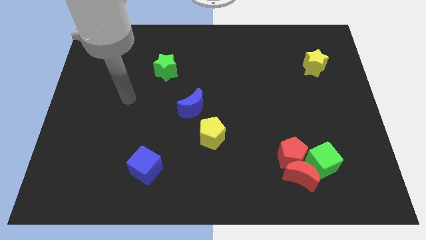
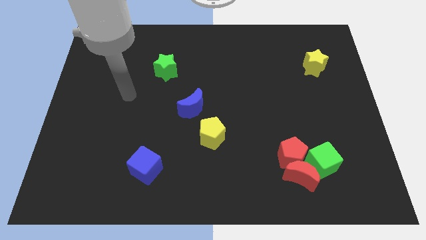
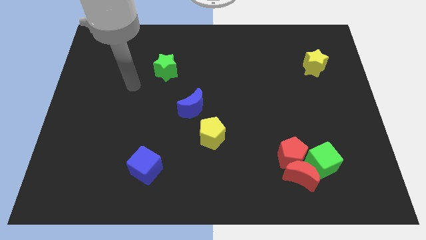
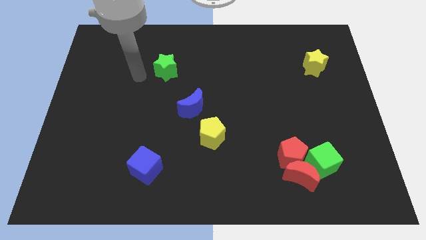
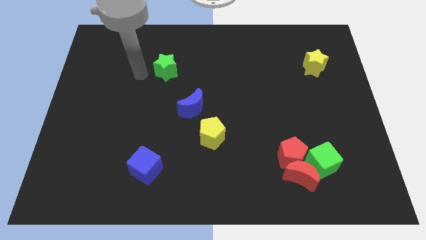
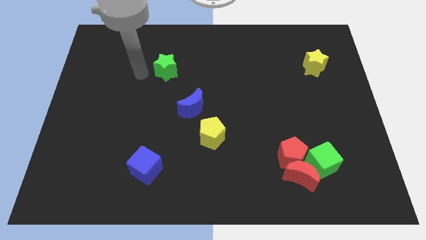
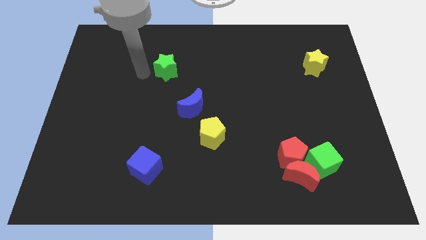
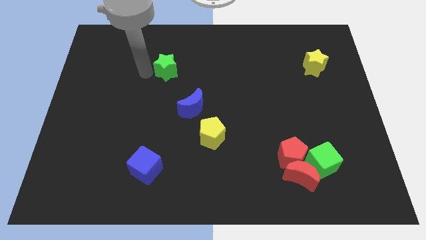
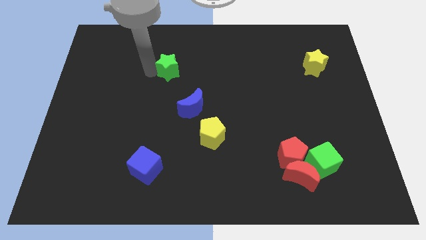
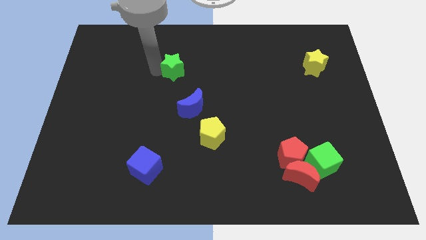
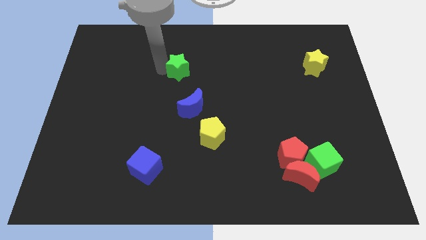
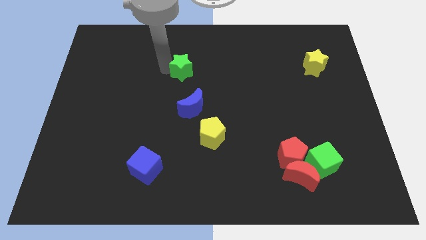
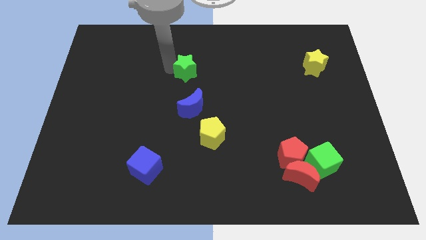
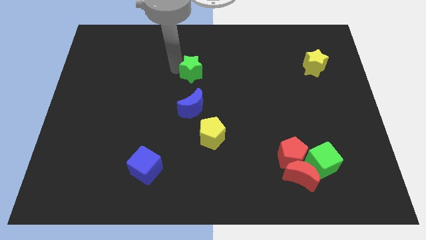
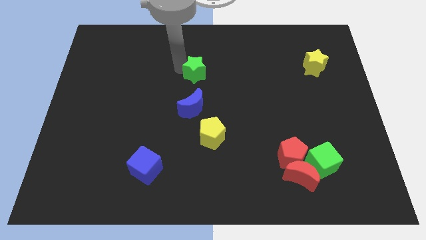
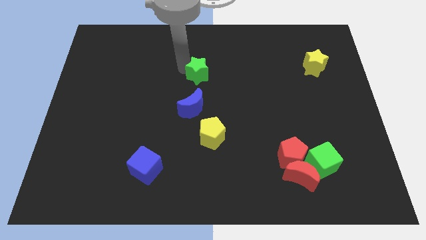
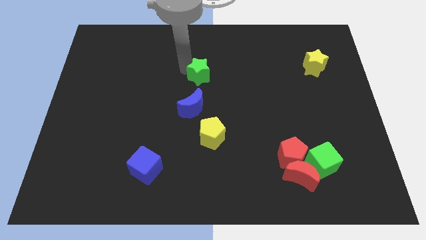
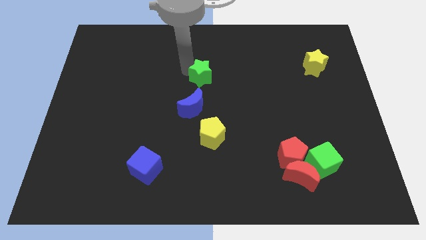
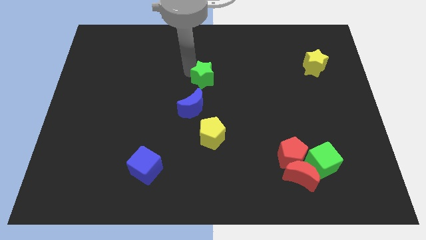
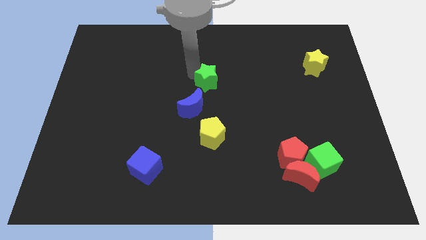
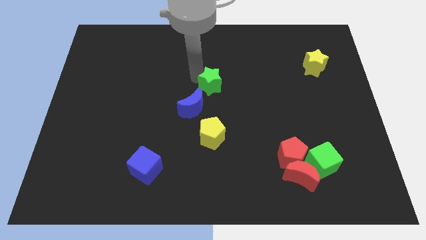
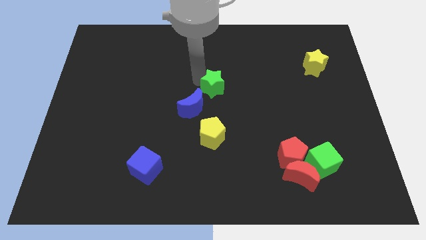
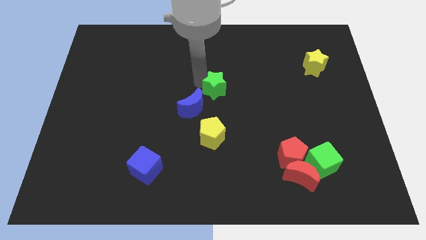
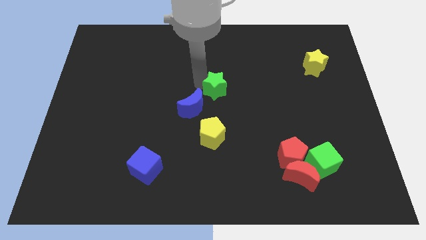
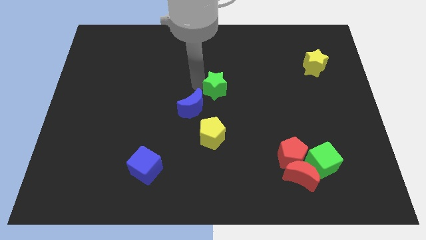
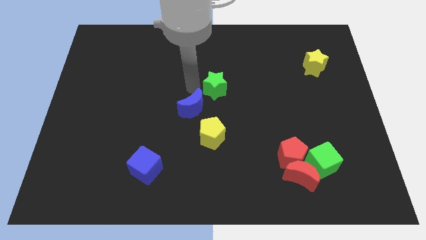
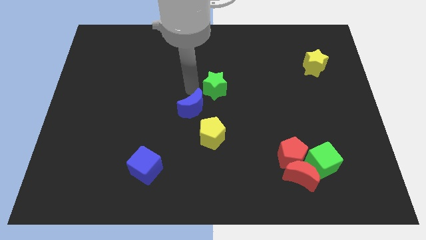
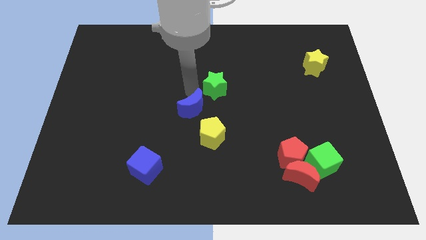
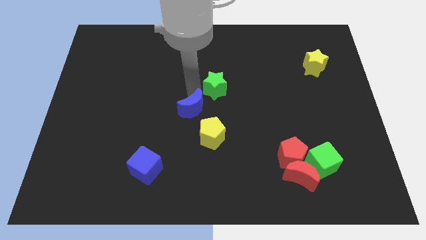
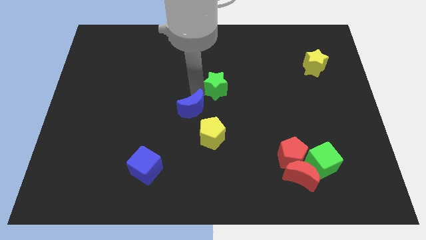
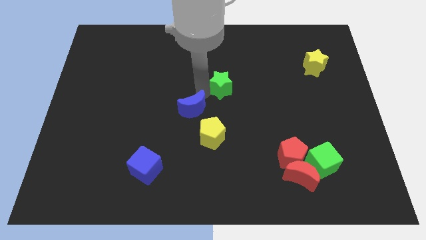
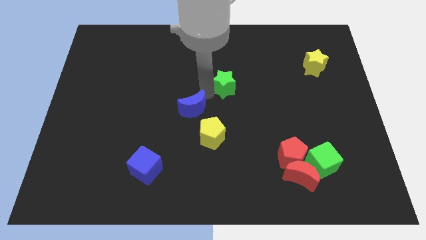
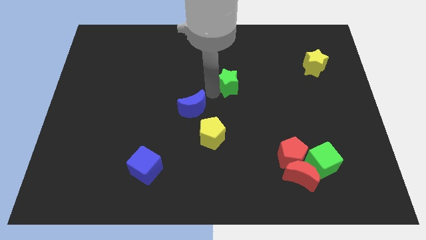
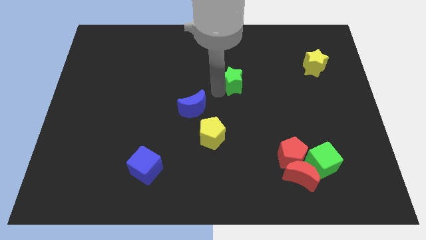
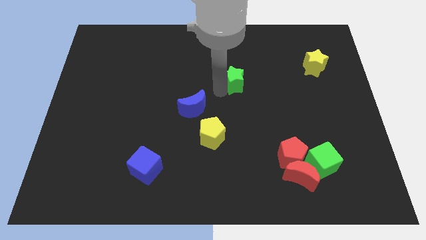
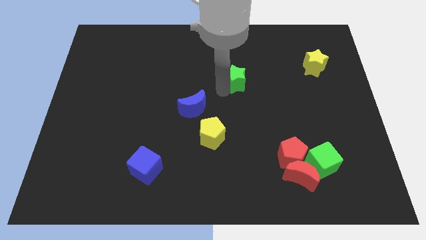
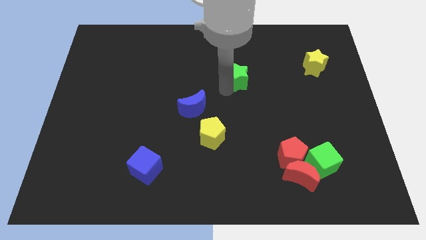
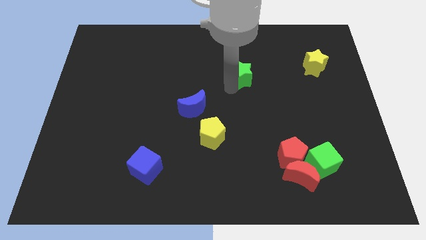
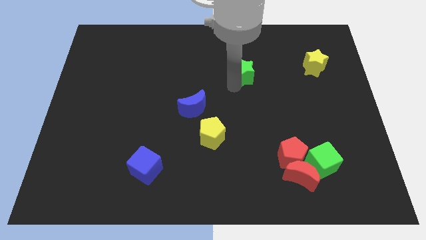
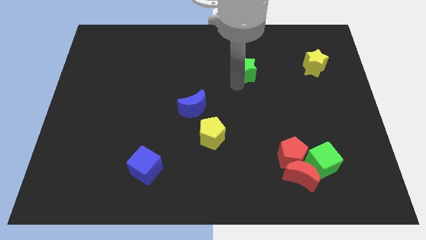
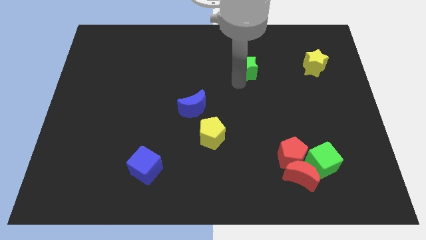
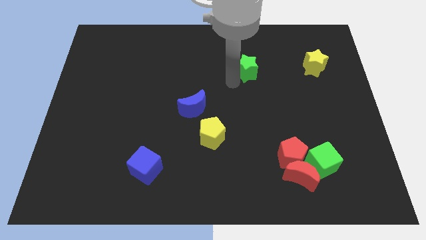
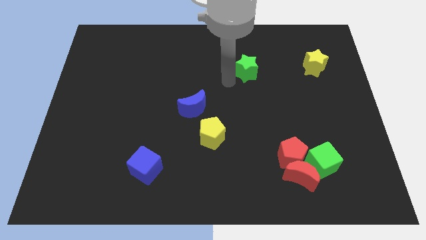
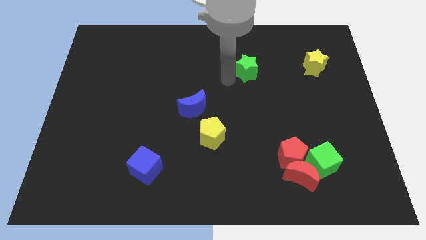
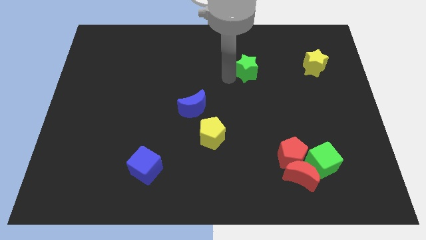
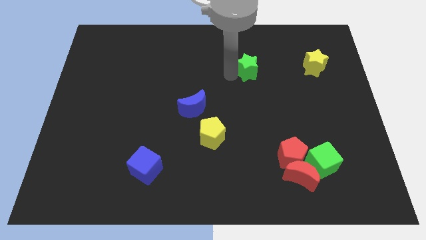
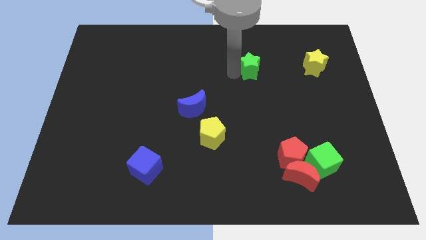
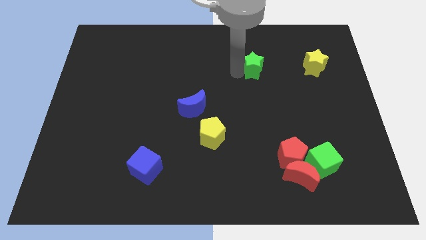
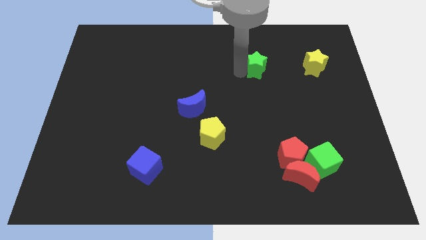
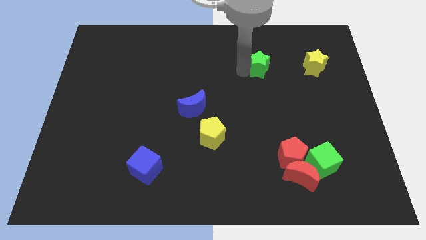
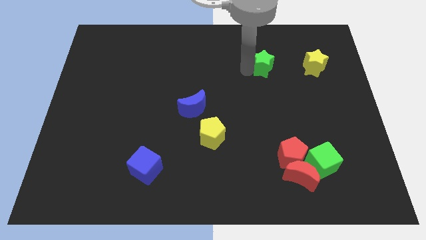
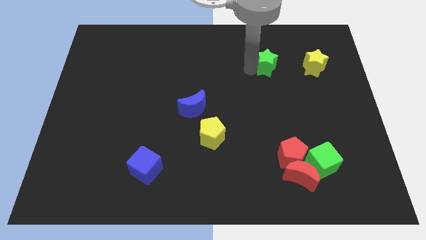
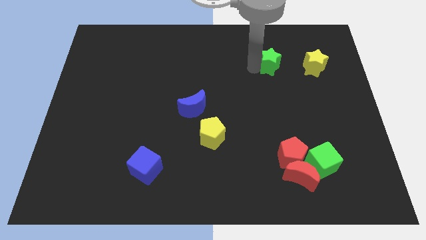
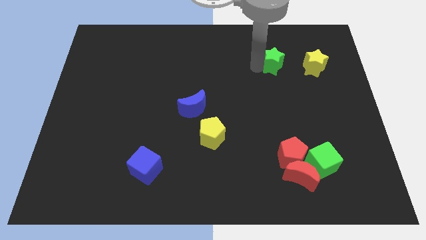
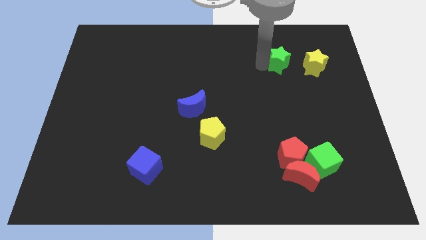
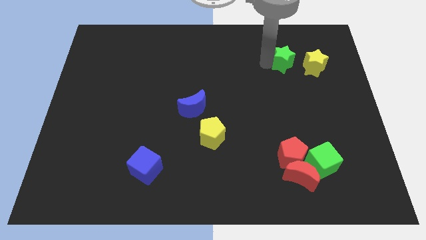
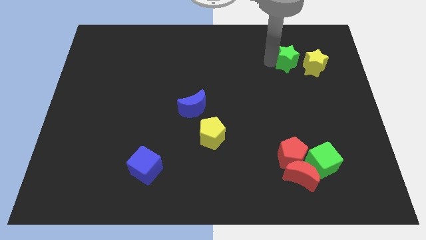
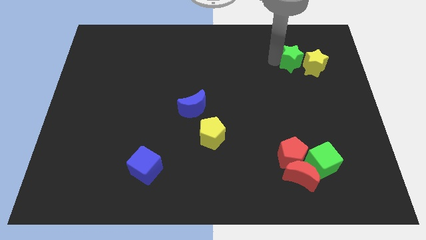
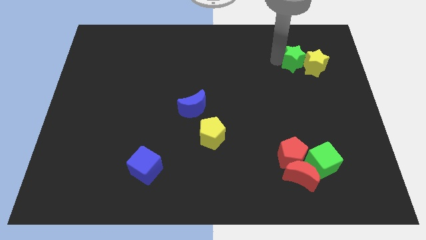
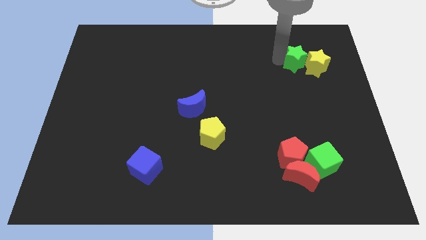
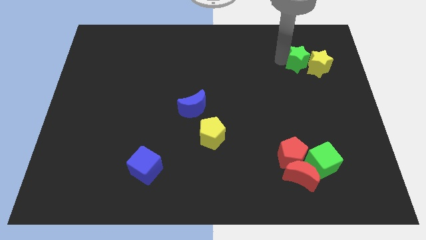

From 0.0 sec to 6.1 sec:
put the green star next to the yellow star

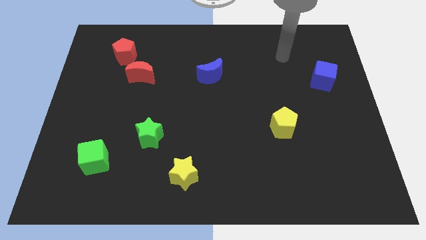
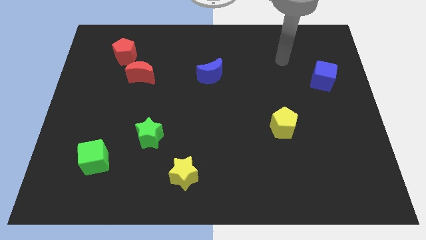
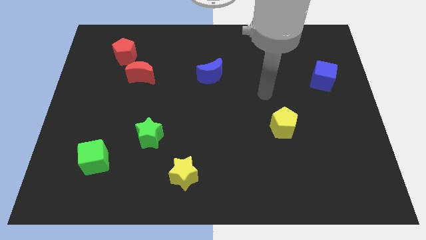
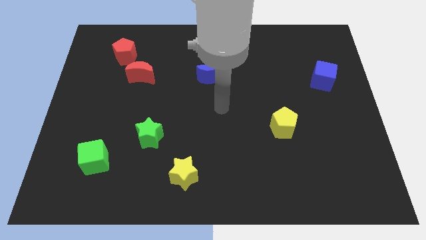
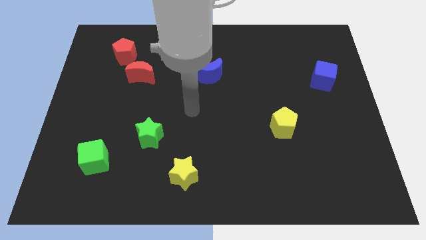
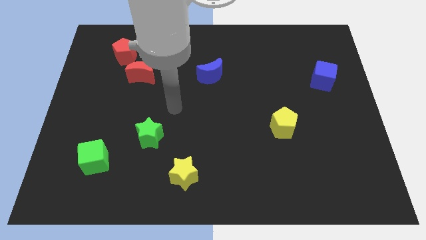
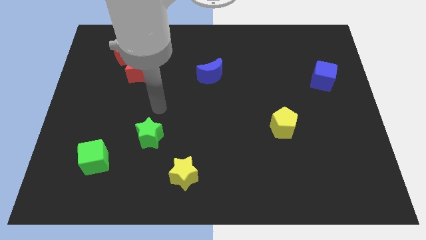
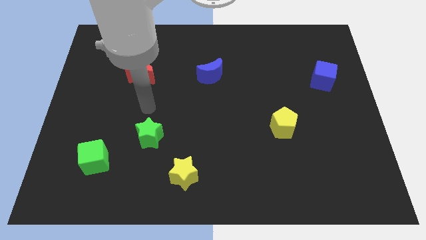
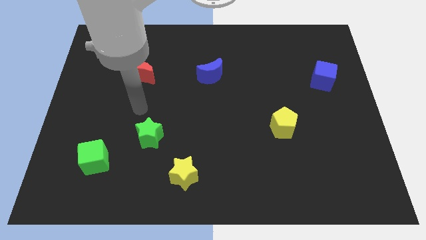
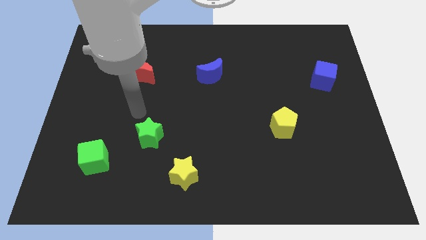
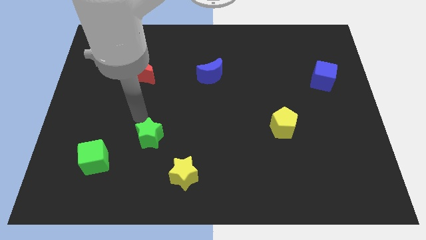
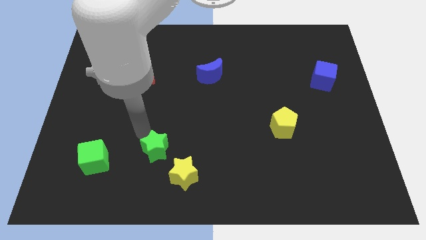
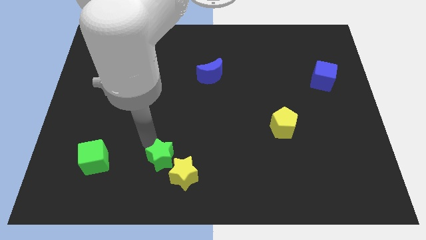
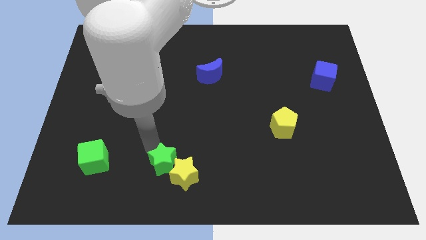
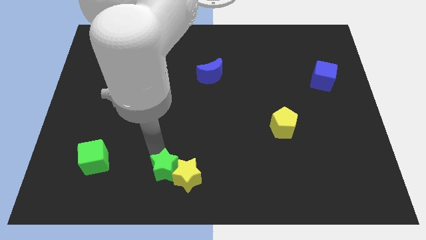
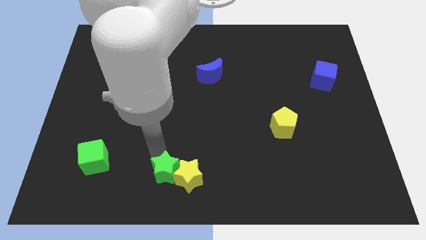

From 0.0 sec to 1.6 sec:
push the green star close to the yellow star

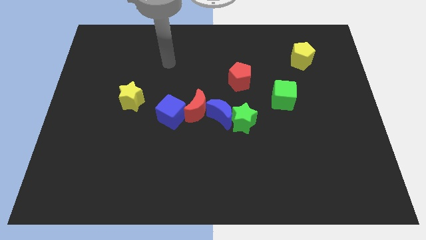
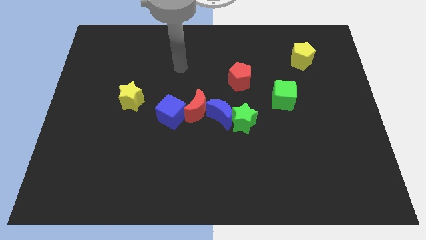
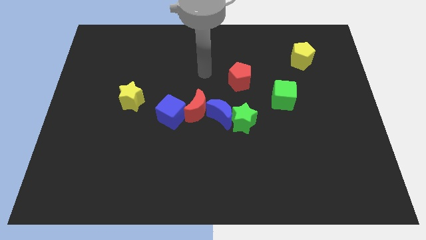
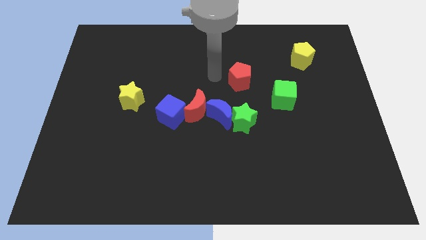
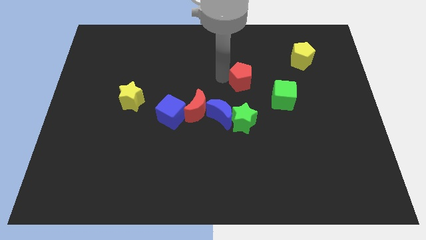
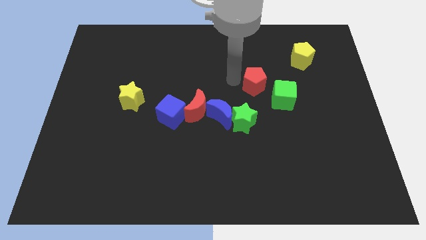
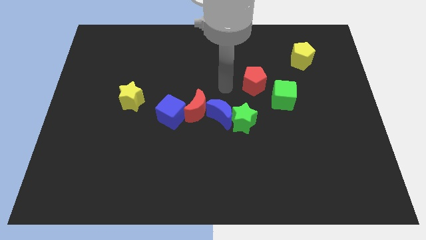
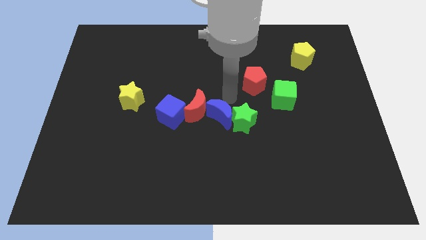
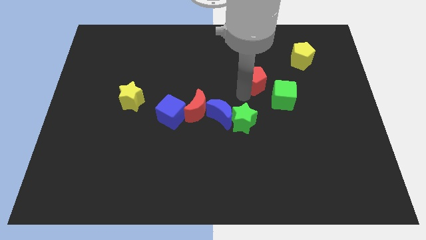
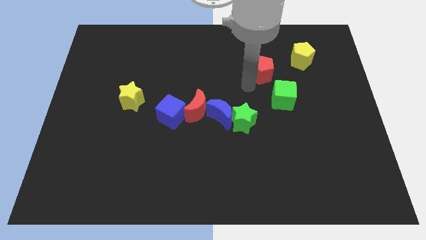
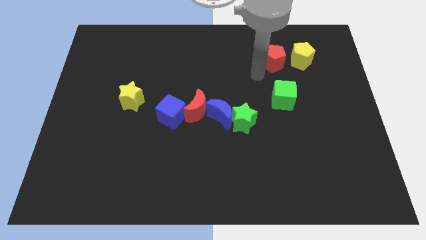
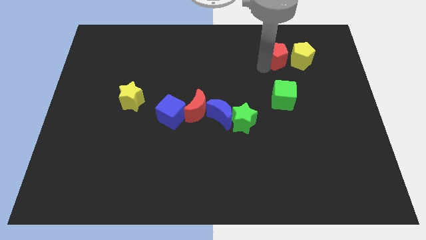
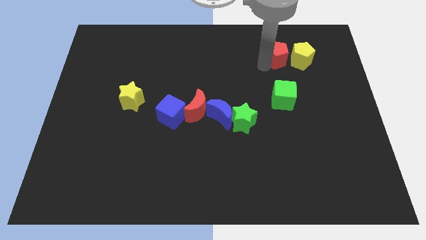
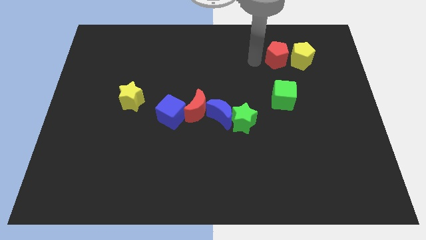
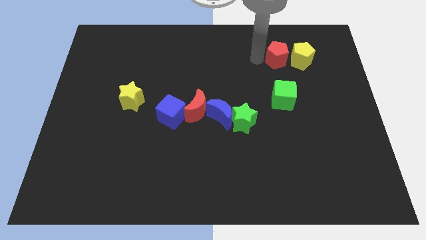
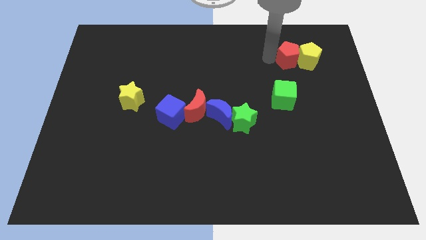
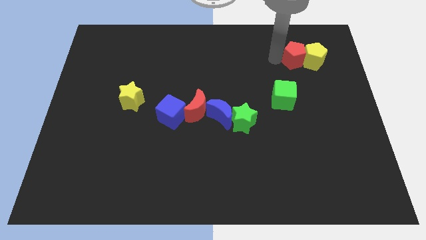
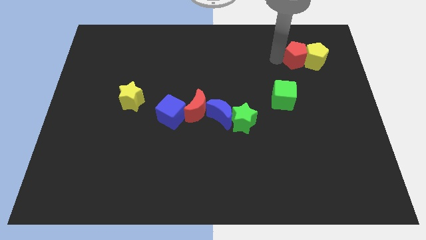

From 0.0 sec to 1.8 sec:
slide the red pentagon to the yellow pentagon
